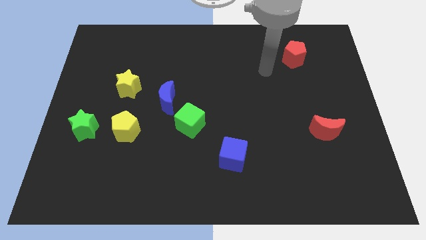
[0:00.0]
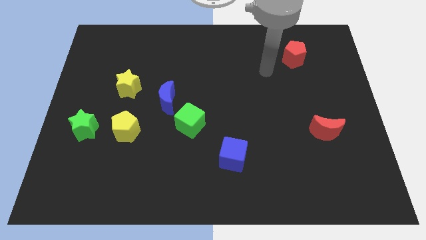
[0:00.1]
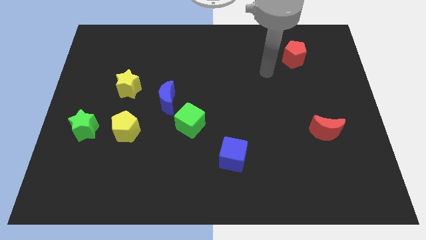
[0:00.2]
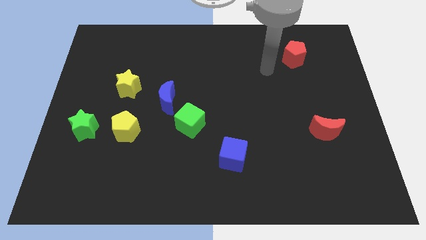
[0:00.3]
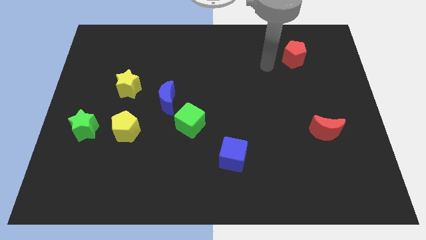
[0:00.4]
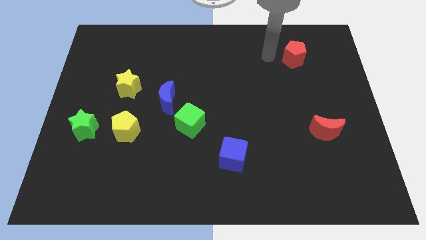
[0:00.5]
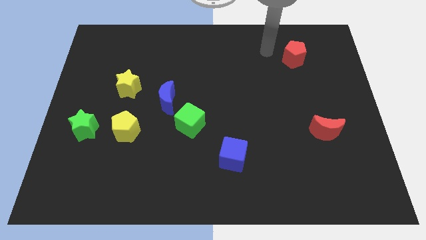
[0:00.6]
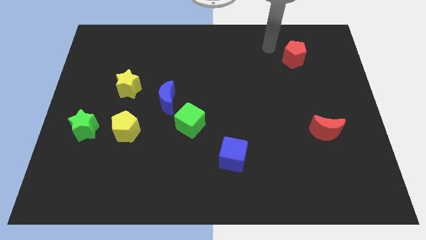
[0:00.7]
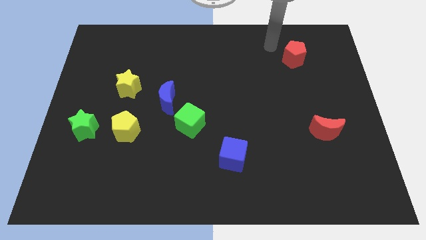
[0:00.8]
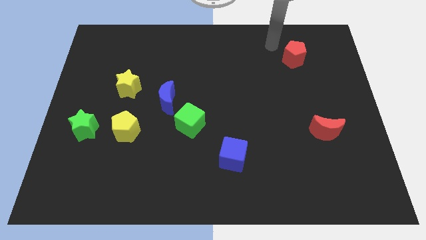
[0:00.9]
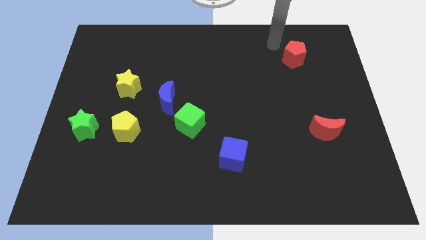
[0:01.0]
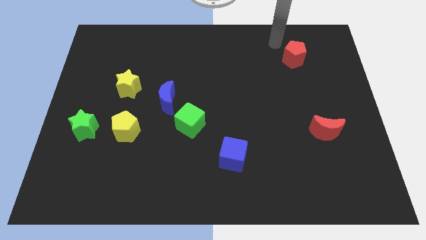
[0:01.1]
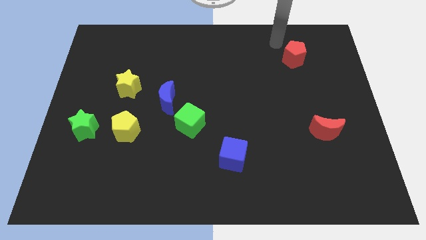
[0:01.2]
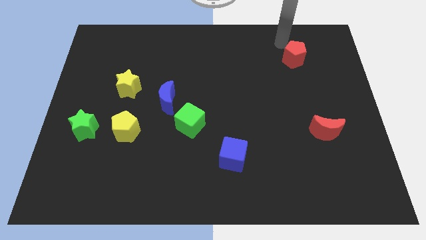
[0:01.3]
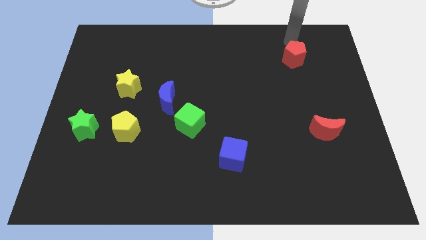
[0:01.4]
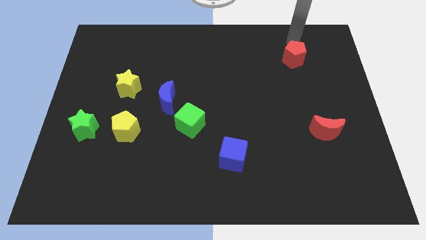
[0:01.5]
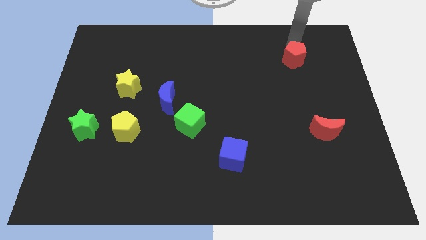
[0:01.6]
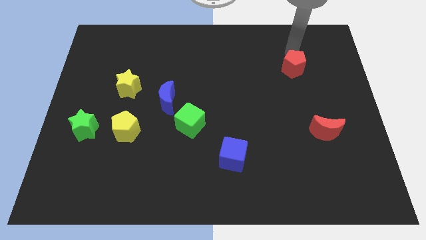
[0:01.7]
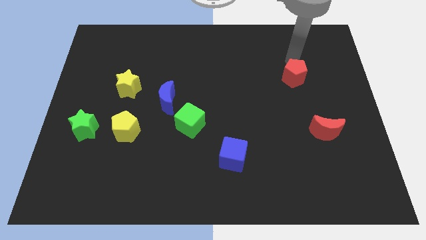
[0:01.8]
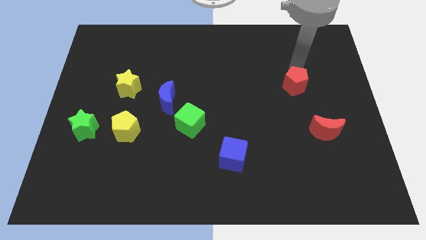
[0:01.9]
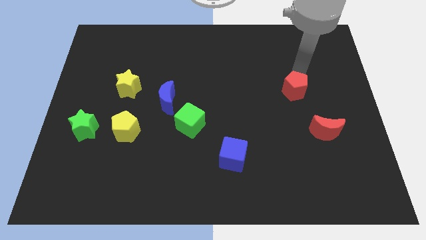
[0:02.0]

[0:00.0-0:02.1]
move the red pentagon to the top left of the red moon

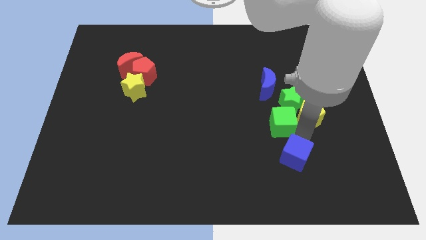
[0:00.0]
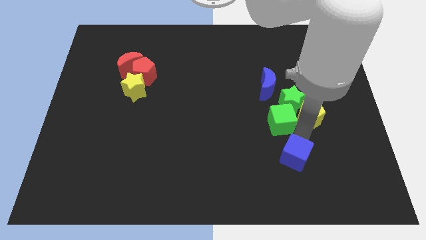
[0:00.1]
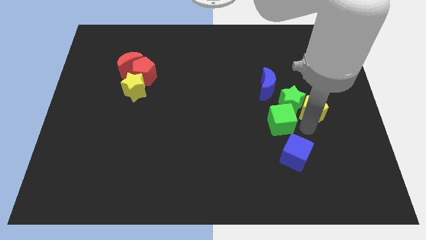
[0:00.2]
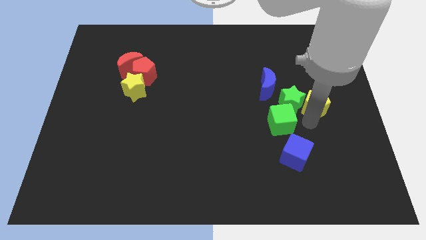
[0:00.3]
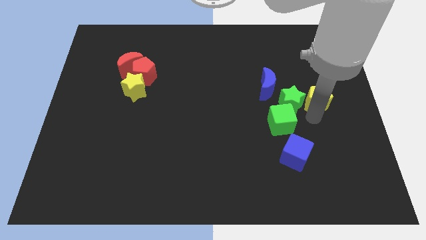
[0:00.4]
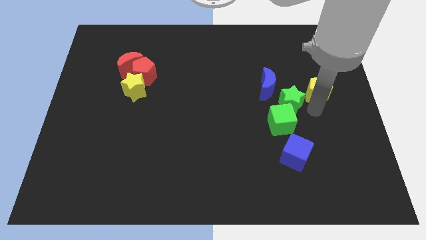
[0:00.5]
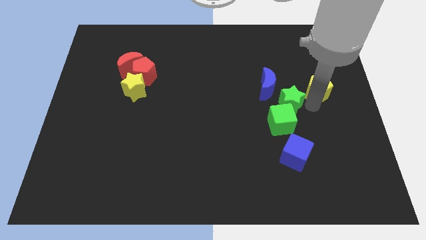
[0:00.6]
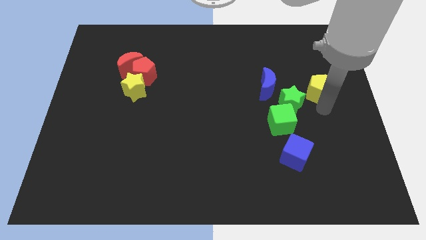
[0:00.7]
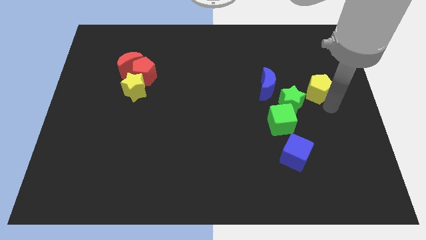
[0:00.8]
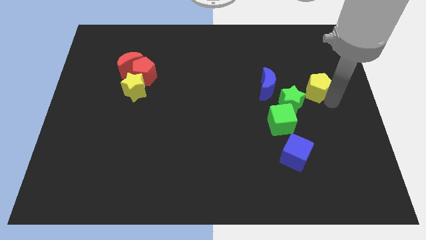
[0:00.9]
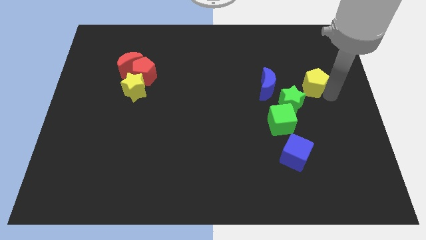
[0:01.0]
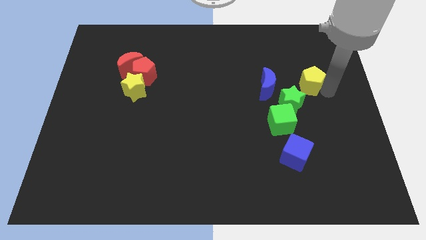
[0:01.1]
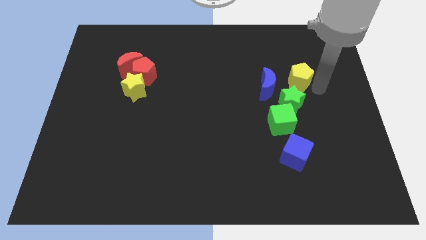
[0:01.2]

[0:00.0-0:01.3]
place the yellow pentagon above the green star

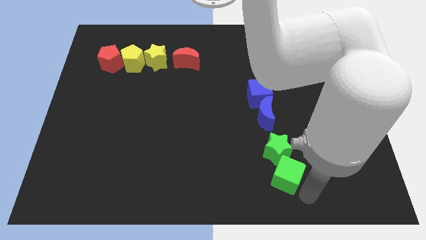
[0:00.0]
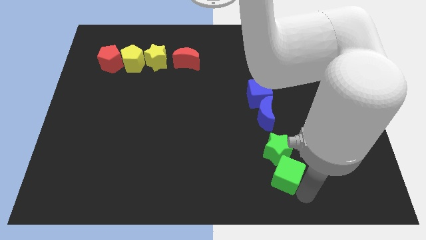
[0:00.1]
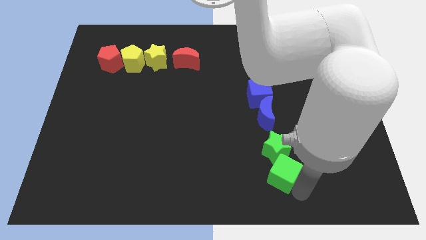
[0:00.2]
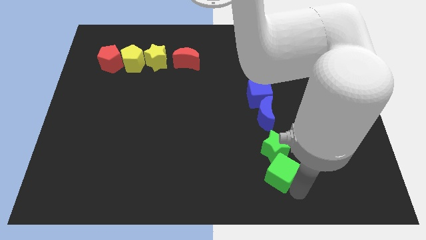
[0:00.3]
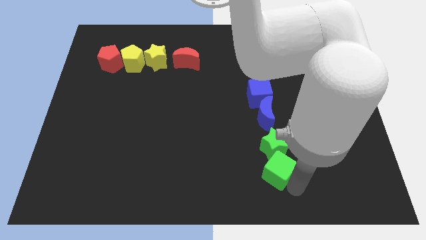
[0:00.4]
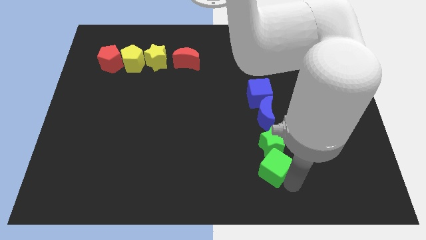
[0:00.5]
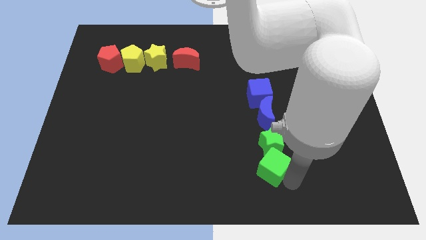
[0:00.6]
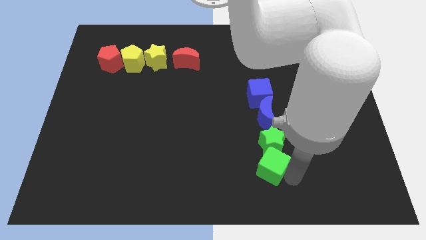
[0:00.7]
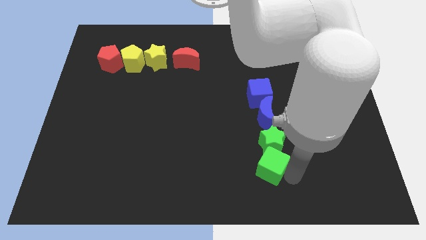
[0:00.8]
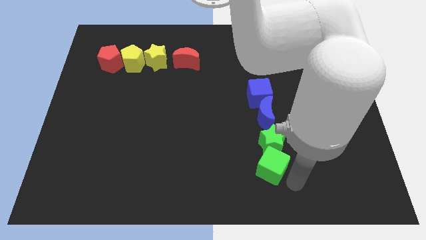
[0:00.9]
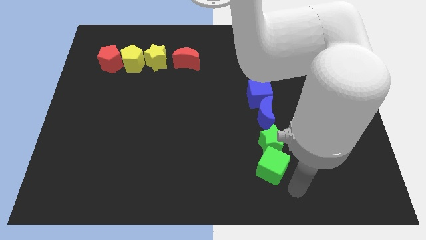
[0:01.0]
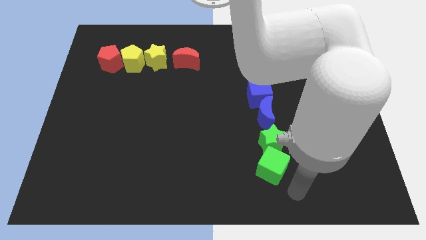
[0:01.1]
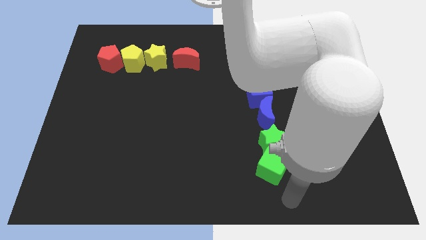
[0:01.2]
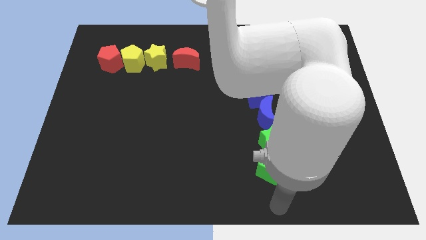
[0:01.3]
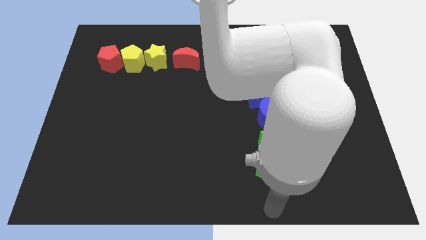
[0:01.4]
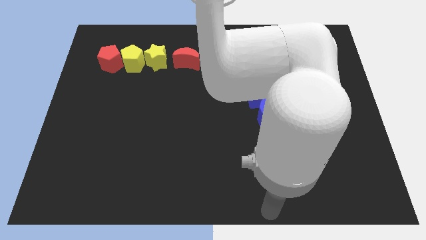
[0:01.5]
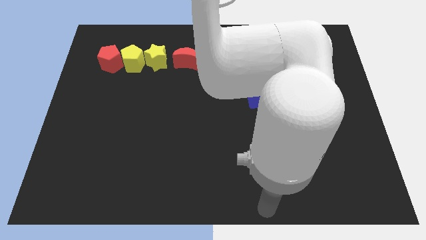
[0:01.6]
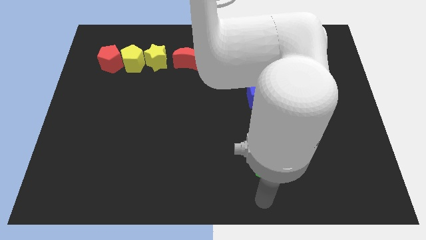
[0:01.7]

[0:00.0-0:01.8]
slightly push the green cube along the green star to the bottom of the blue crescent

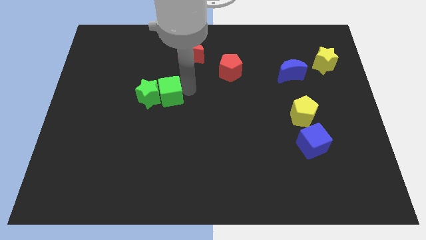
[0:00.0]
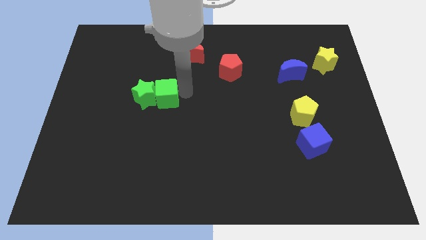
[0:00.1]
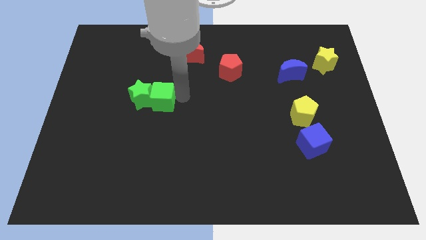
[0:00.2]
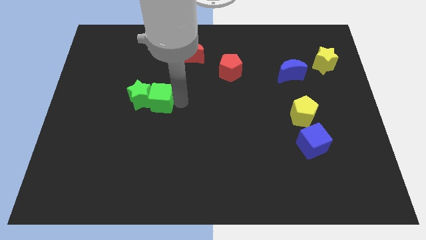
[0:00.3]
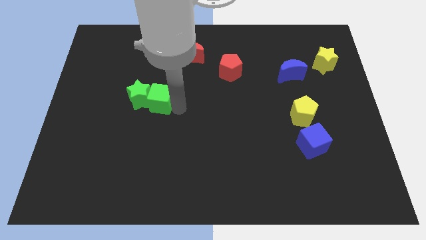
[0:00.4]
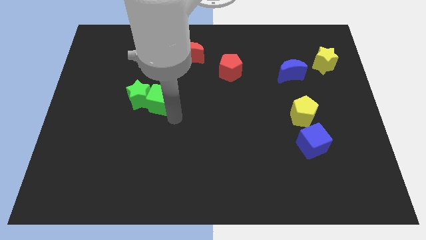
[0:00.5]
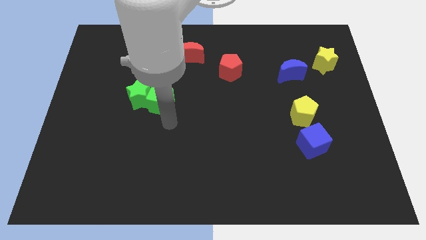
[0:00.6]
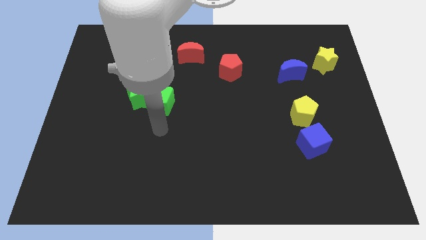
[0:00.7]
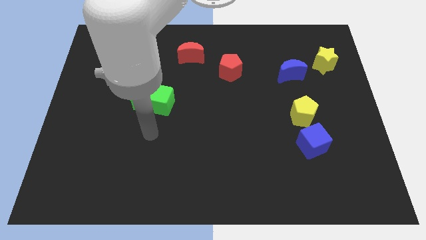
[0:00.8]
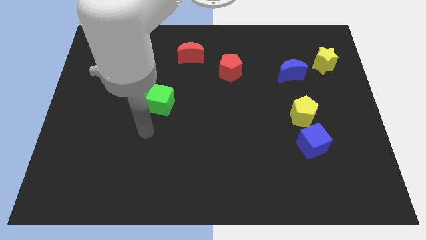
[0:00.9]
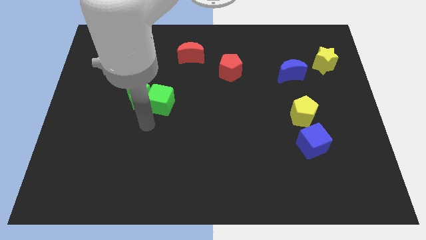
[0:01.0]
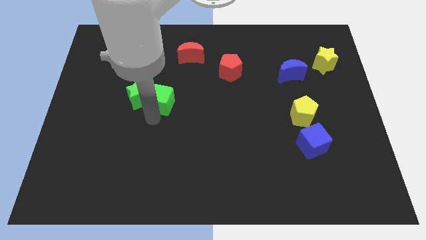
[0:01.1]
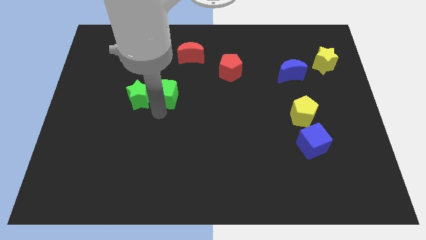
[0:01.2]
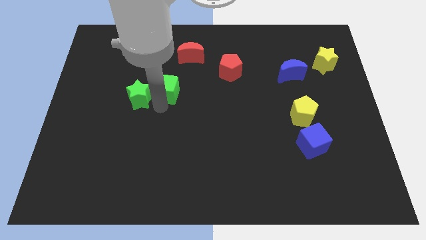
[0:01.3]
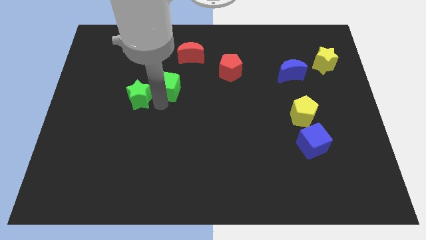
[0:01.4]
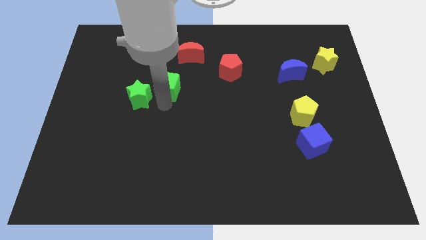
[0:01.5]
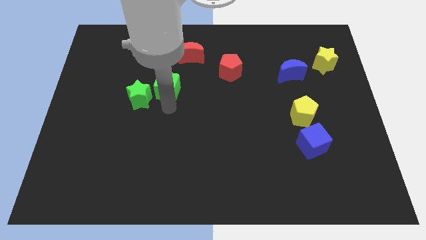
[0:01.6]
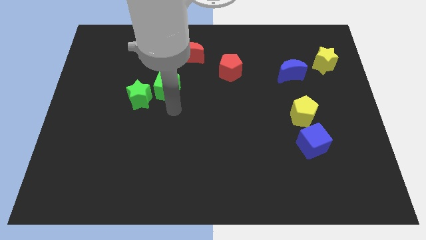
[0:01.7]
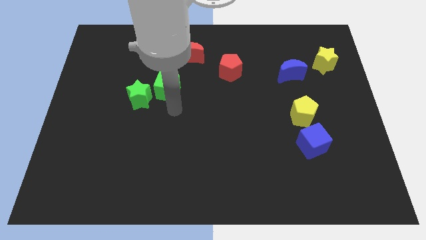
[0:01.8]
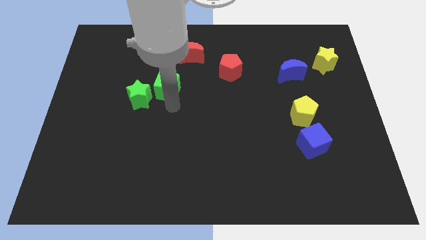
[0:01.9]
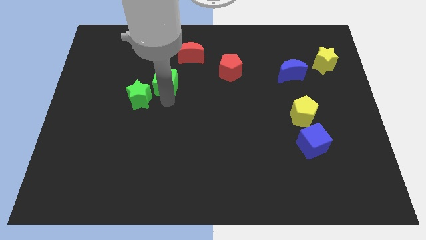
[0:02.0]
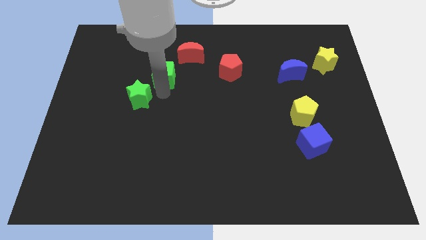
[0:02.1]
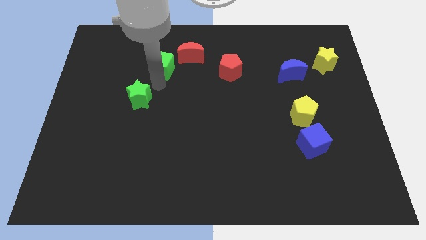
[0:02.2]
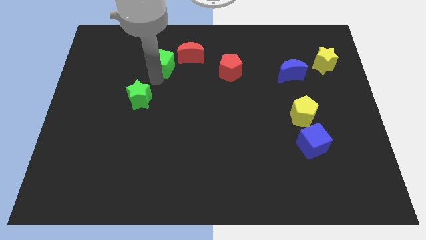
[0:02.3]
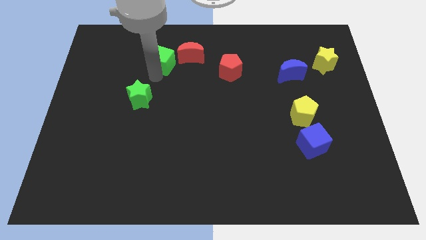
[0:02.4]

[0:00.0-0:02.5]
separate the green cube from the green star

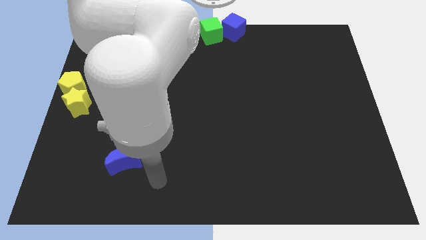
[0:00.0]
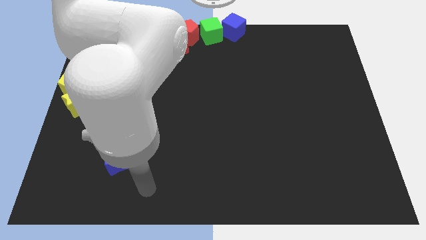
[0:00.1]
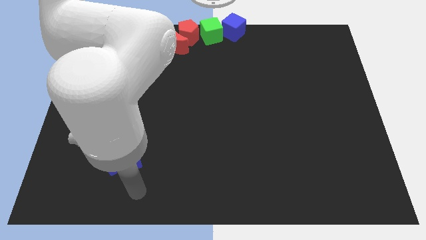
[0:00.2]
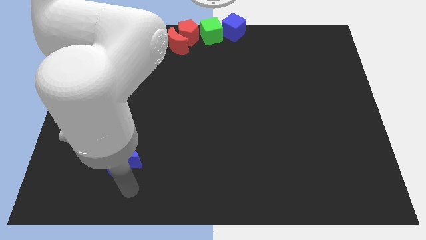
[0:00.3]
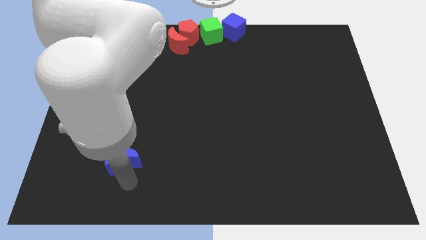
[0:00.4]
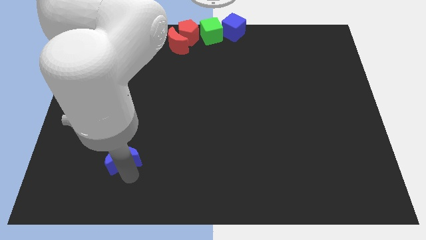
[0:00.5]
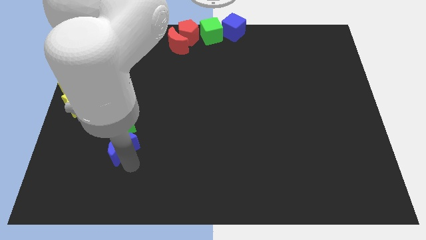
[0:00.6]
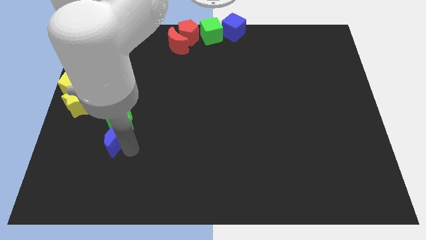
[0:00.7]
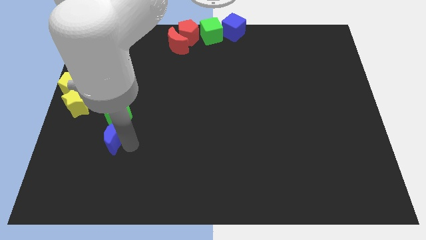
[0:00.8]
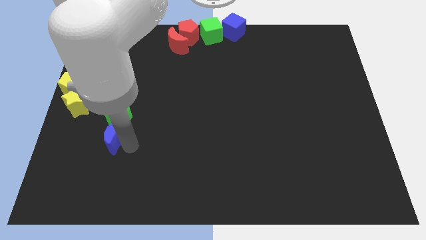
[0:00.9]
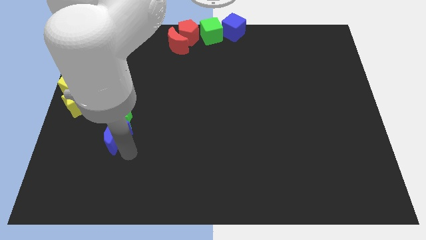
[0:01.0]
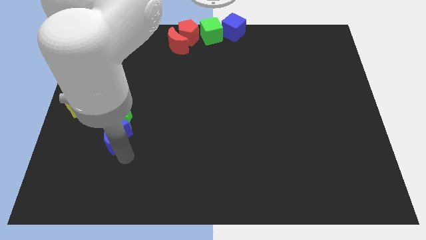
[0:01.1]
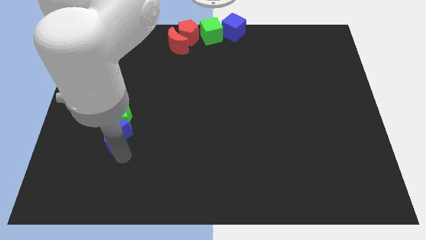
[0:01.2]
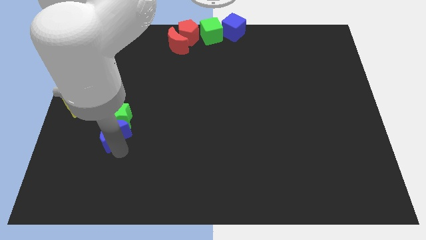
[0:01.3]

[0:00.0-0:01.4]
move blue moon into the green star
